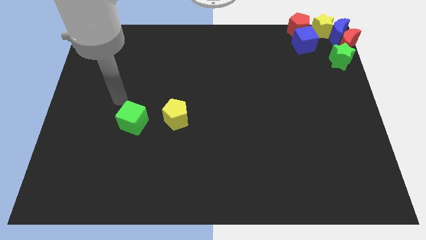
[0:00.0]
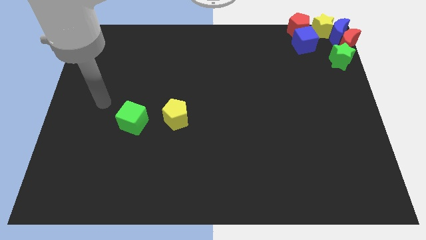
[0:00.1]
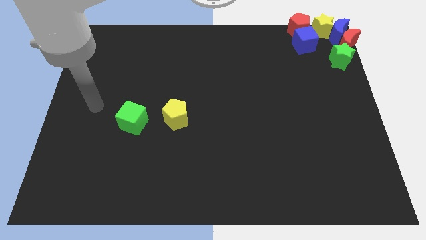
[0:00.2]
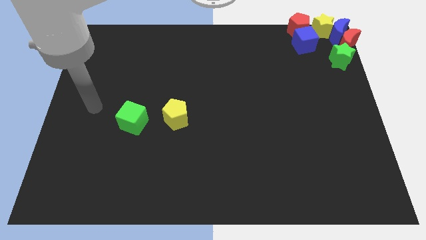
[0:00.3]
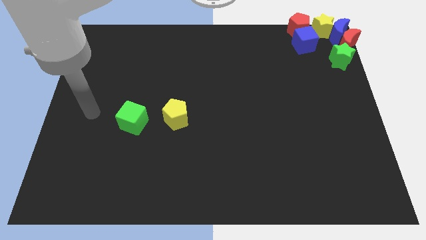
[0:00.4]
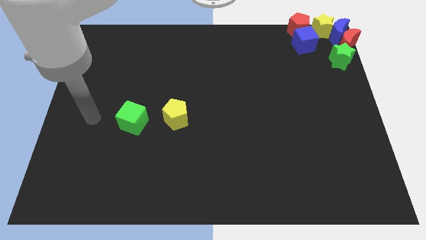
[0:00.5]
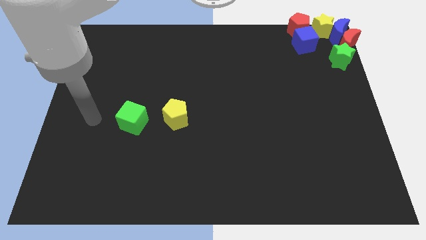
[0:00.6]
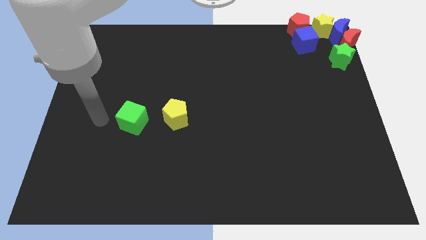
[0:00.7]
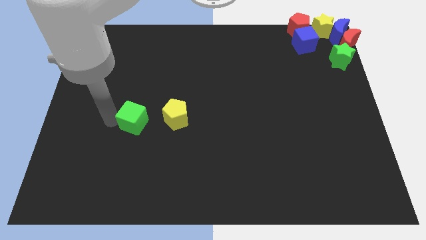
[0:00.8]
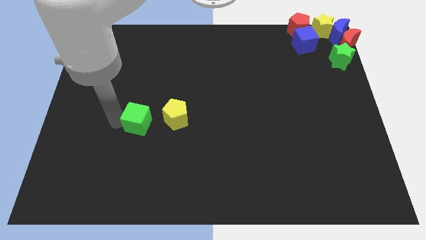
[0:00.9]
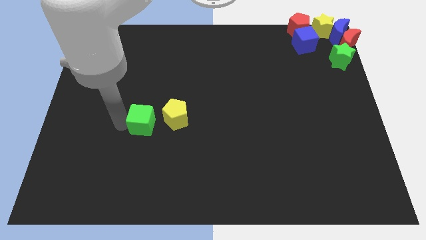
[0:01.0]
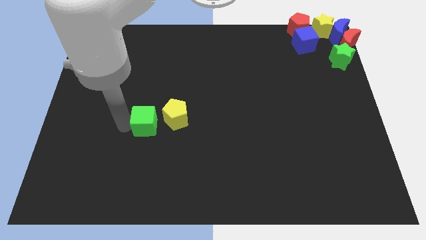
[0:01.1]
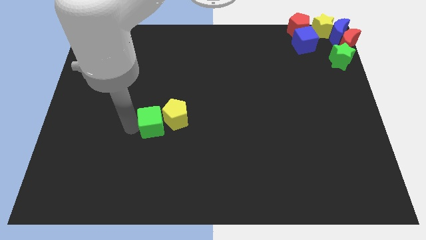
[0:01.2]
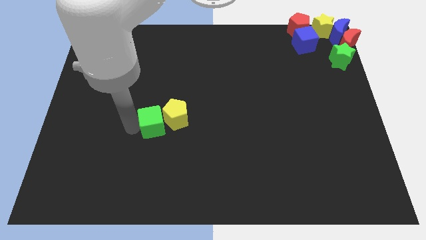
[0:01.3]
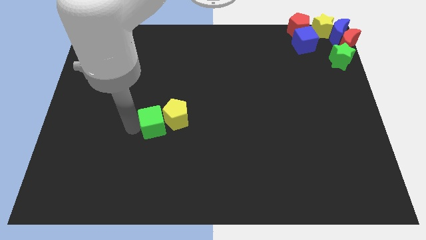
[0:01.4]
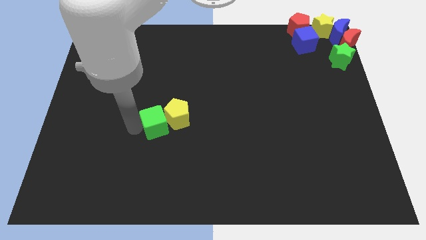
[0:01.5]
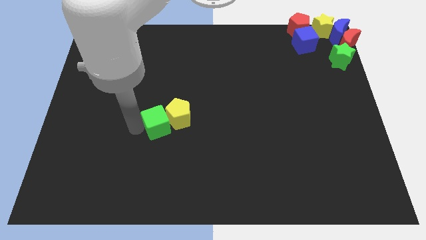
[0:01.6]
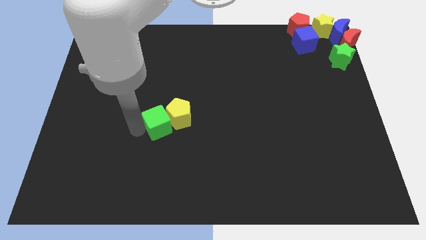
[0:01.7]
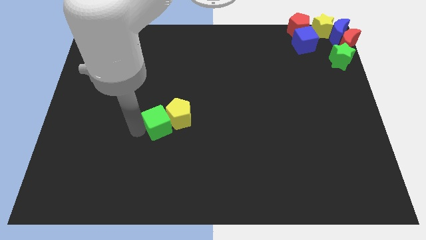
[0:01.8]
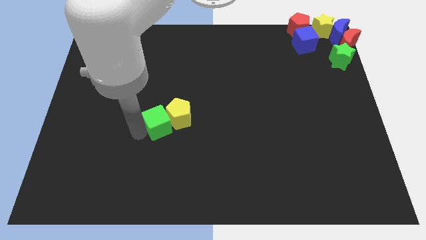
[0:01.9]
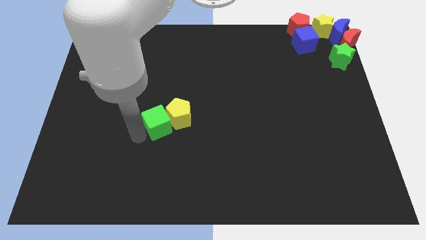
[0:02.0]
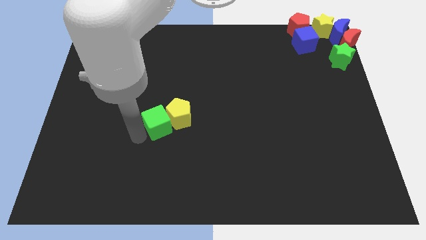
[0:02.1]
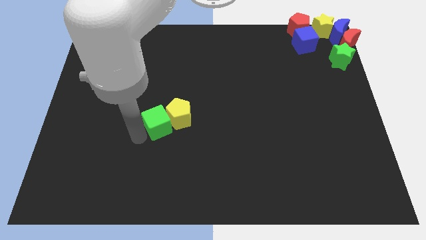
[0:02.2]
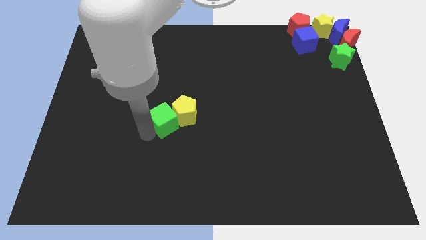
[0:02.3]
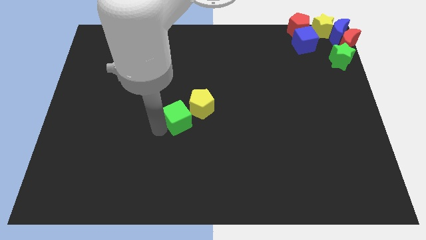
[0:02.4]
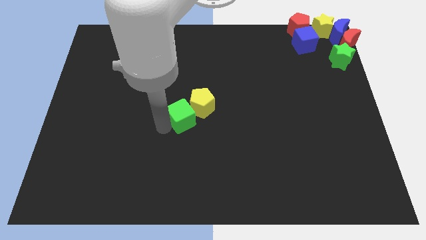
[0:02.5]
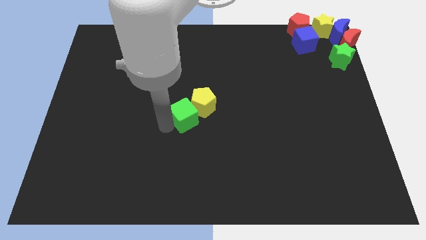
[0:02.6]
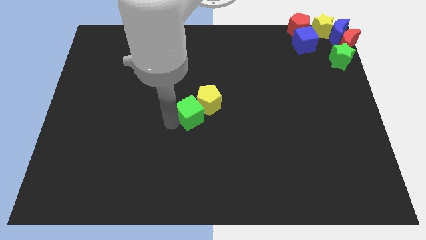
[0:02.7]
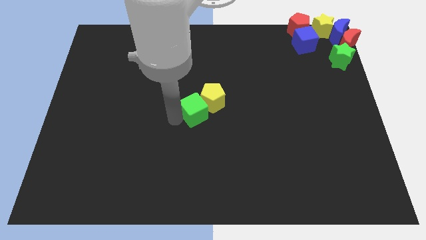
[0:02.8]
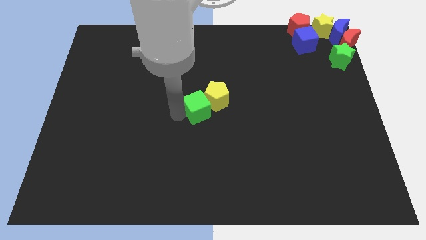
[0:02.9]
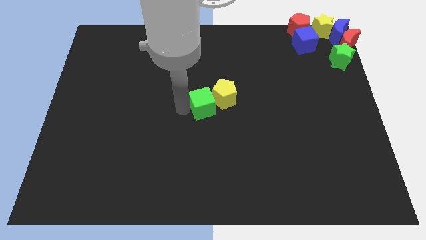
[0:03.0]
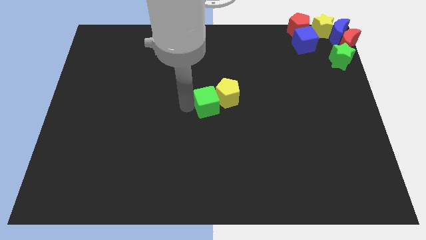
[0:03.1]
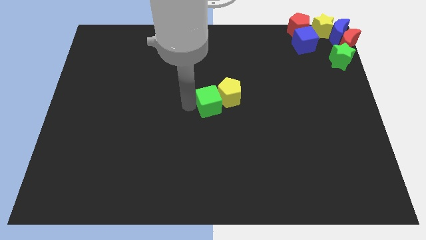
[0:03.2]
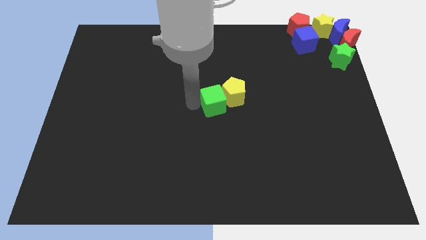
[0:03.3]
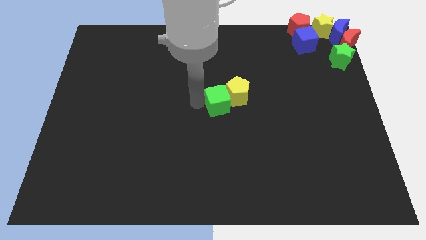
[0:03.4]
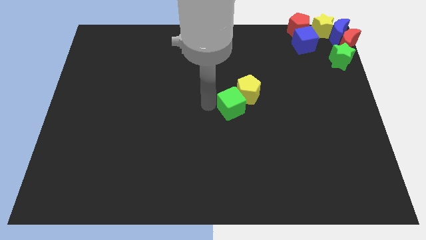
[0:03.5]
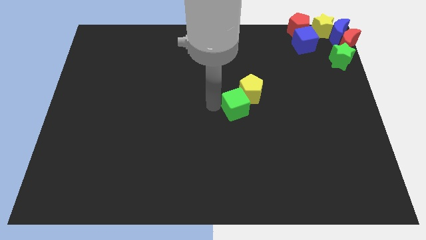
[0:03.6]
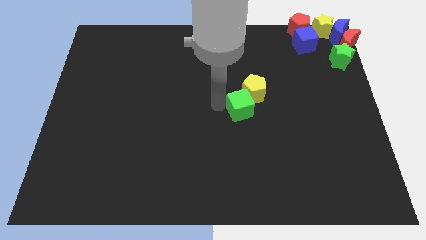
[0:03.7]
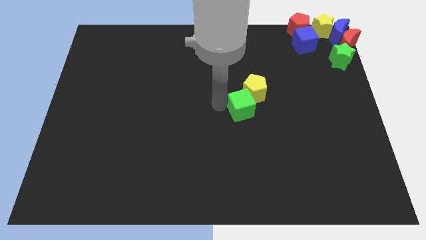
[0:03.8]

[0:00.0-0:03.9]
slide the green cube and yellow pentagon to the center

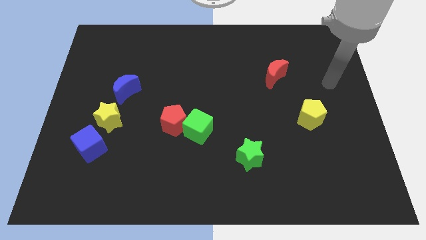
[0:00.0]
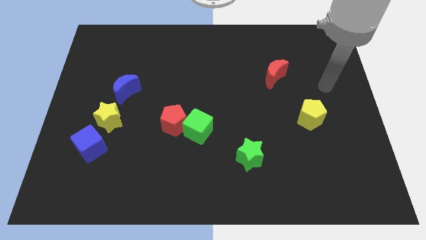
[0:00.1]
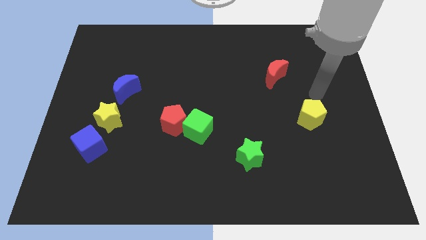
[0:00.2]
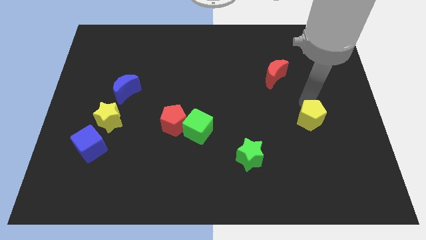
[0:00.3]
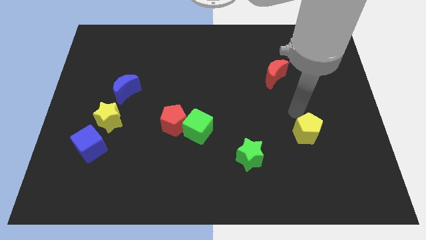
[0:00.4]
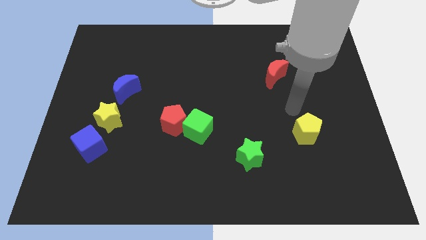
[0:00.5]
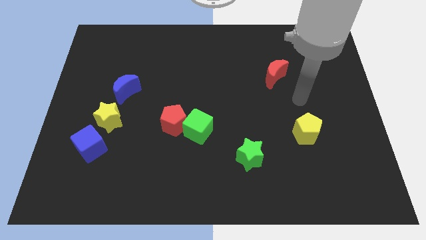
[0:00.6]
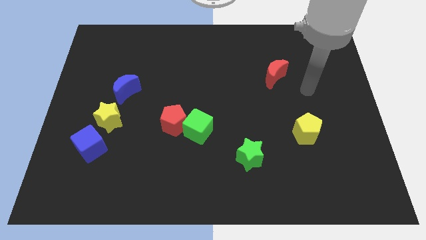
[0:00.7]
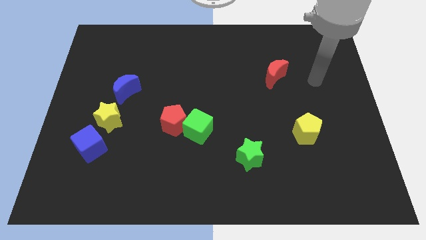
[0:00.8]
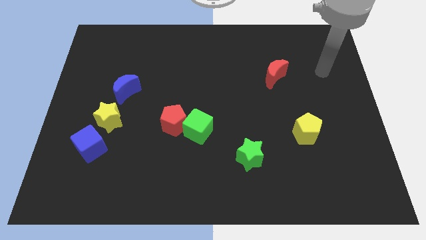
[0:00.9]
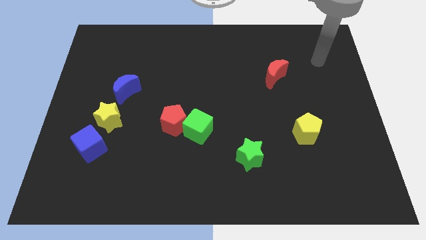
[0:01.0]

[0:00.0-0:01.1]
move the yellow pentagon slightly downwards

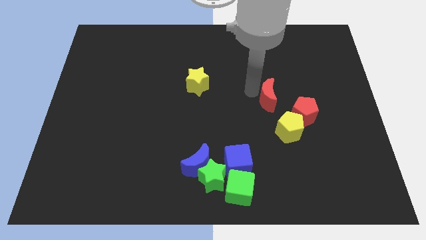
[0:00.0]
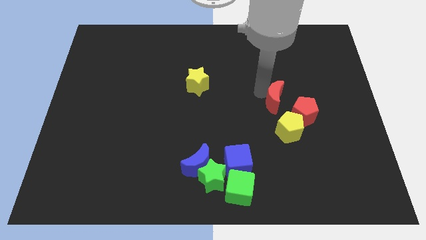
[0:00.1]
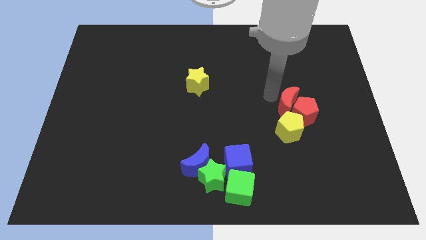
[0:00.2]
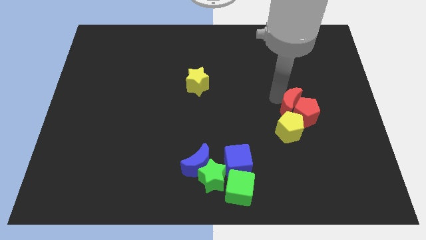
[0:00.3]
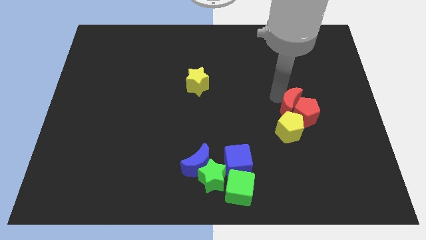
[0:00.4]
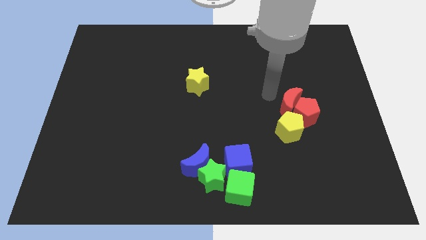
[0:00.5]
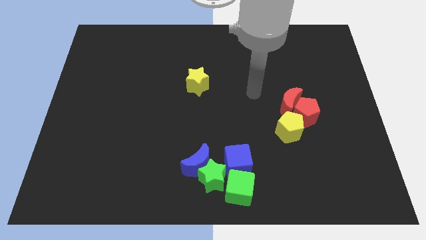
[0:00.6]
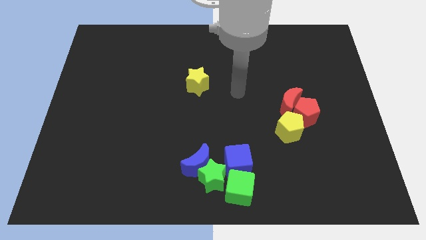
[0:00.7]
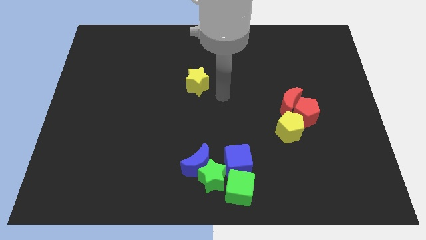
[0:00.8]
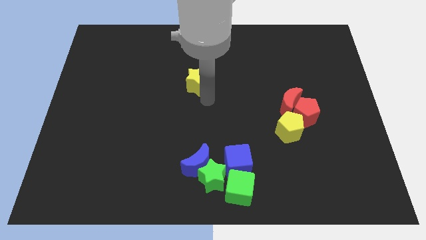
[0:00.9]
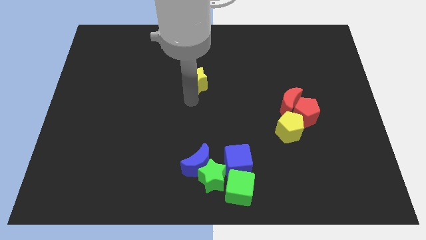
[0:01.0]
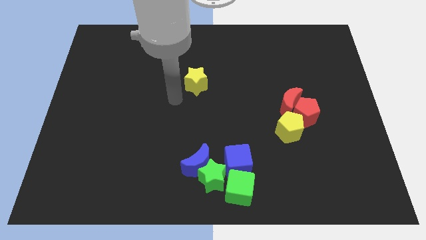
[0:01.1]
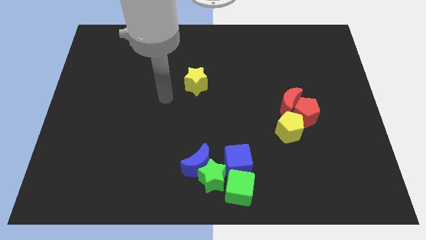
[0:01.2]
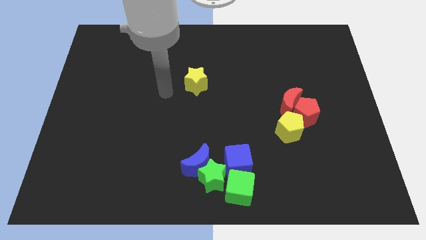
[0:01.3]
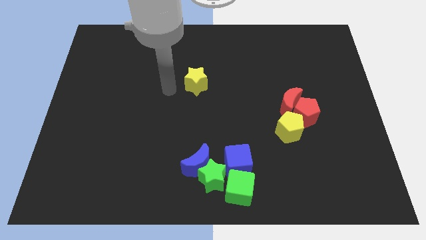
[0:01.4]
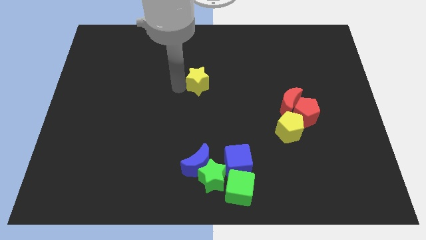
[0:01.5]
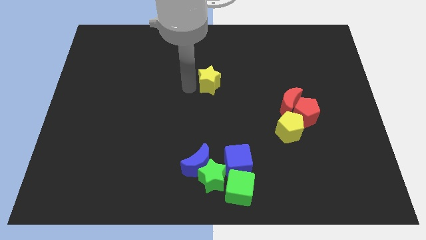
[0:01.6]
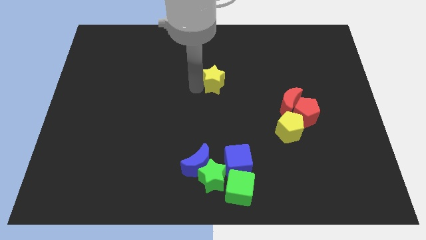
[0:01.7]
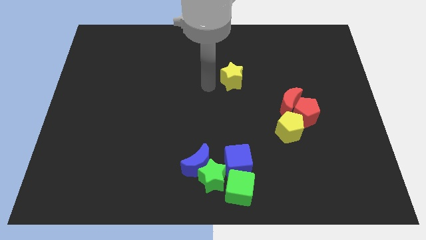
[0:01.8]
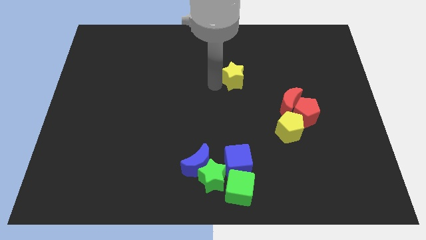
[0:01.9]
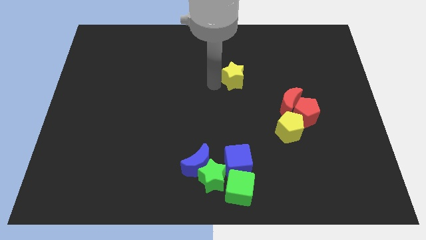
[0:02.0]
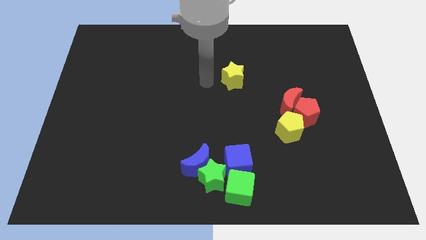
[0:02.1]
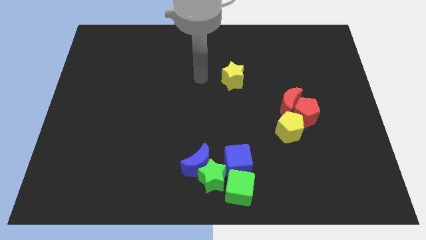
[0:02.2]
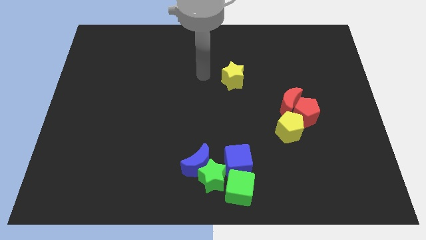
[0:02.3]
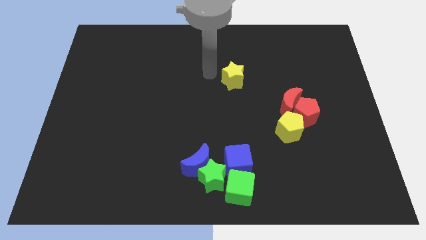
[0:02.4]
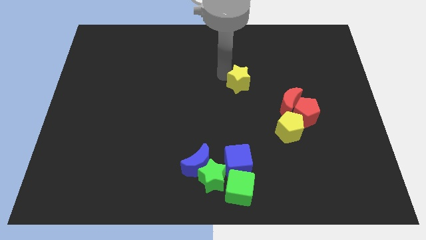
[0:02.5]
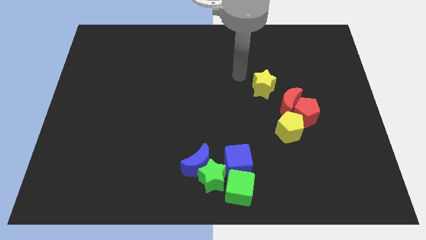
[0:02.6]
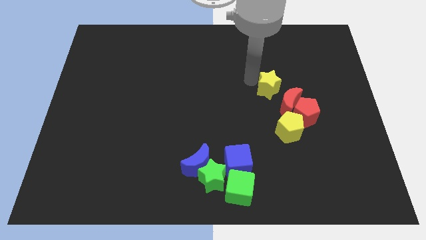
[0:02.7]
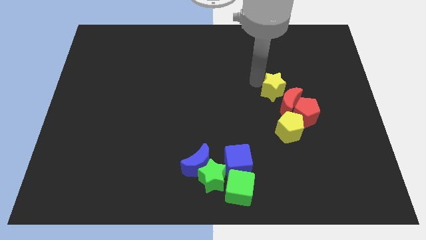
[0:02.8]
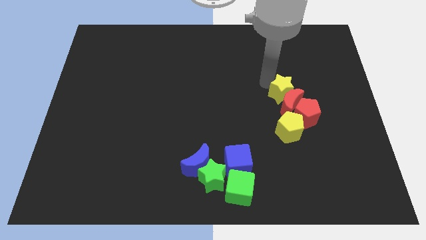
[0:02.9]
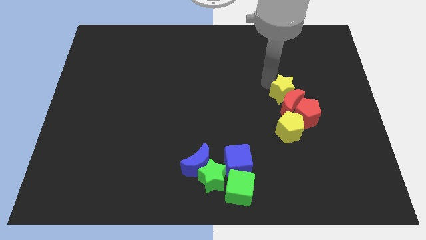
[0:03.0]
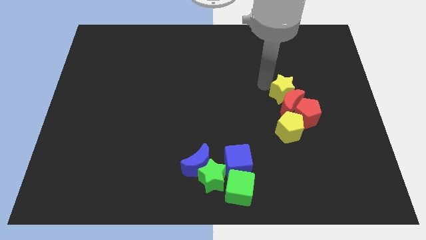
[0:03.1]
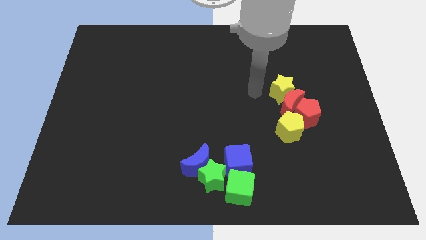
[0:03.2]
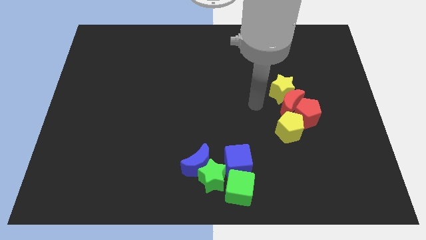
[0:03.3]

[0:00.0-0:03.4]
push the yellow star into the red crescent

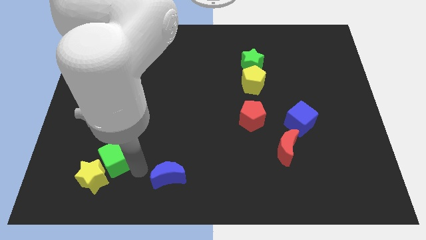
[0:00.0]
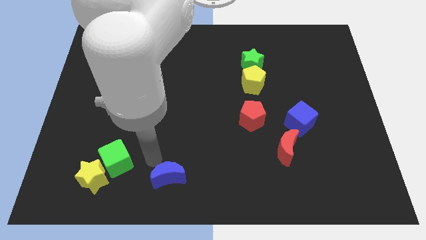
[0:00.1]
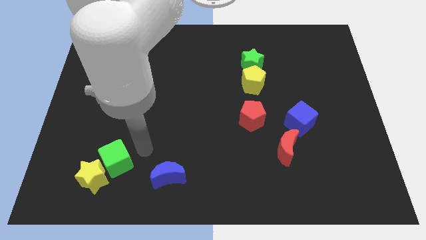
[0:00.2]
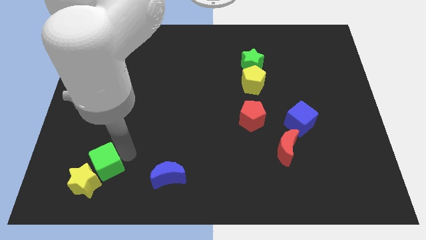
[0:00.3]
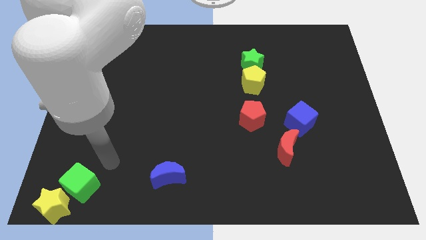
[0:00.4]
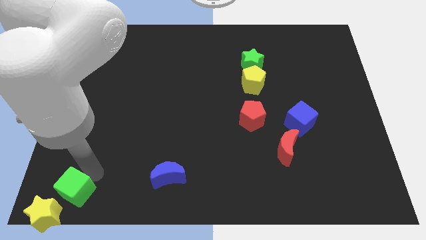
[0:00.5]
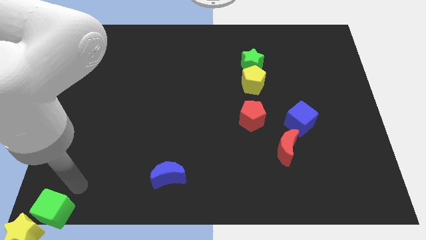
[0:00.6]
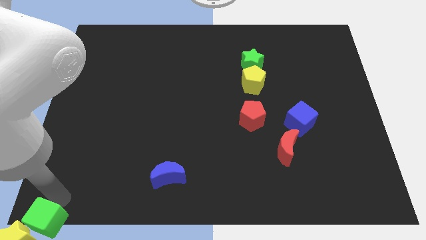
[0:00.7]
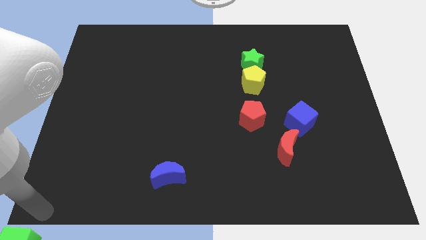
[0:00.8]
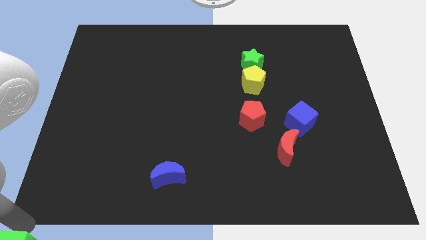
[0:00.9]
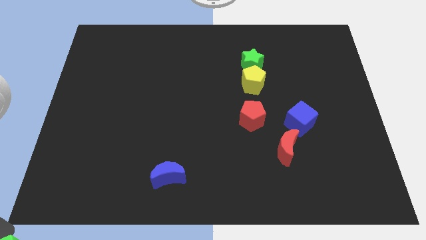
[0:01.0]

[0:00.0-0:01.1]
move the green cube and yellow star away from the board
